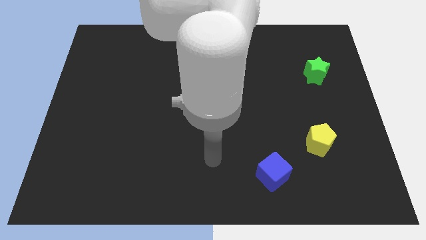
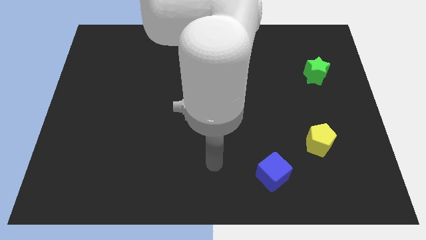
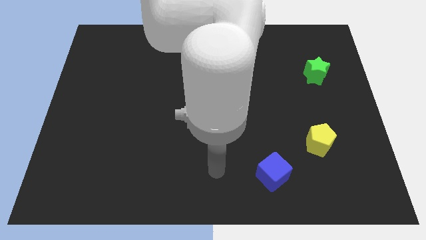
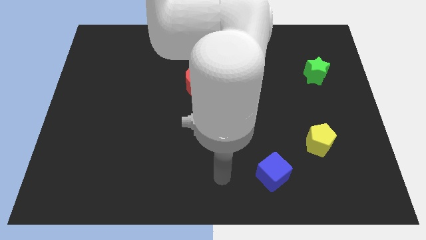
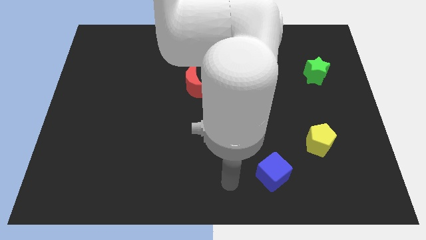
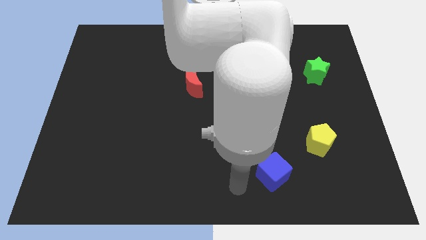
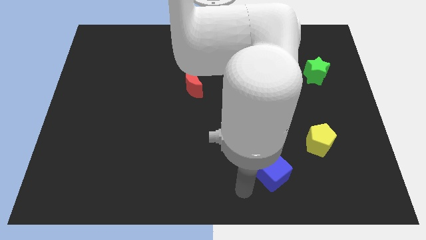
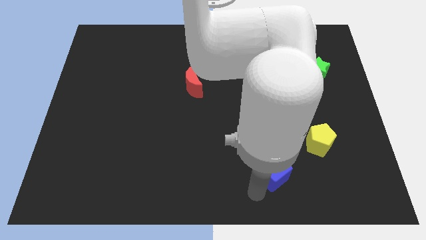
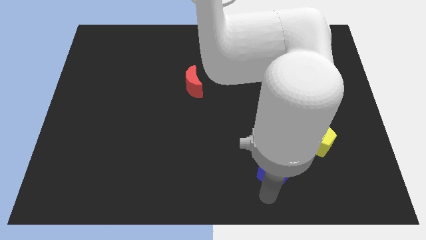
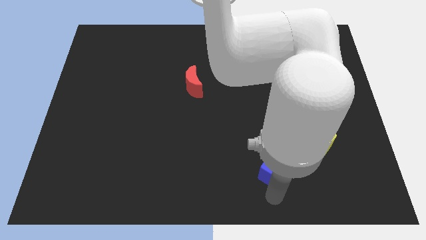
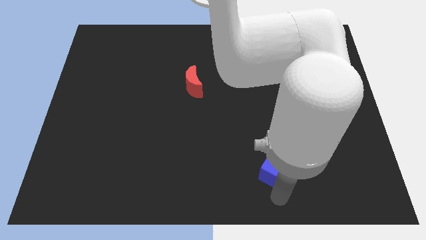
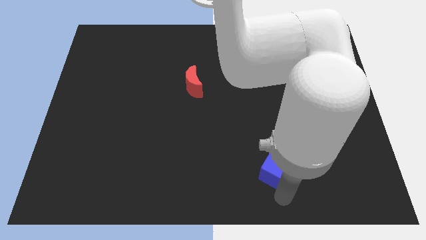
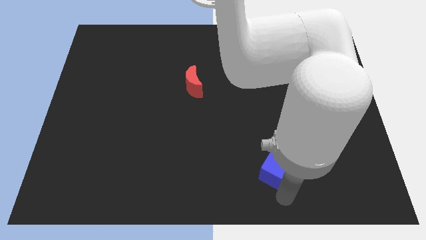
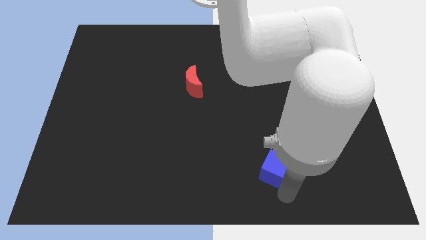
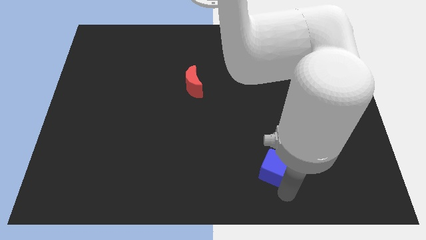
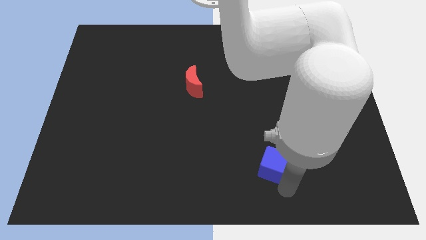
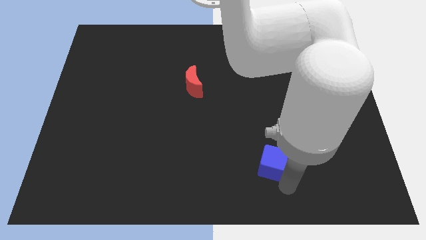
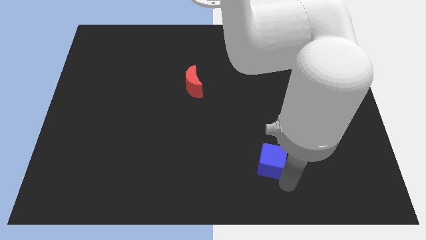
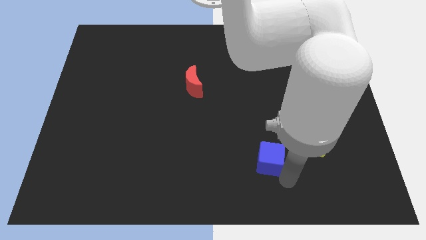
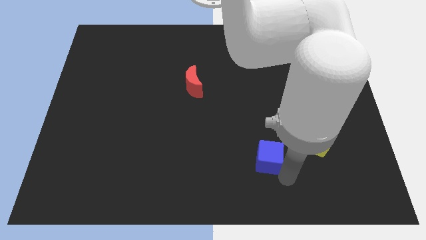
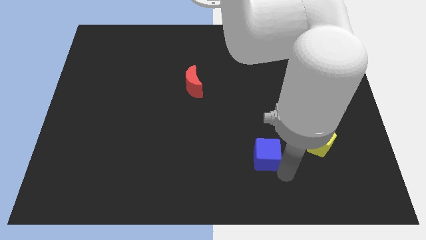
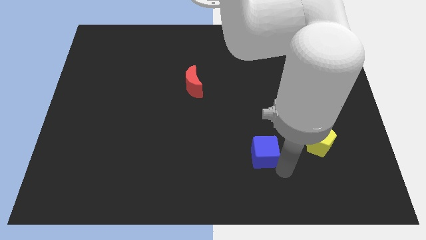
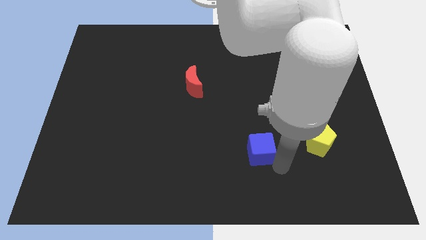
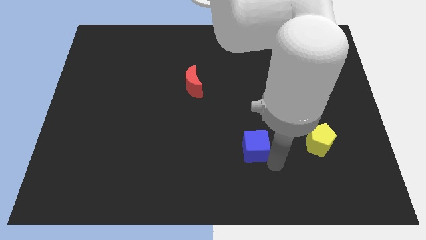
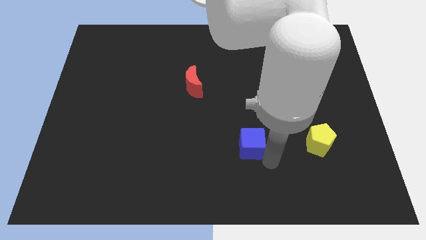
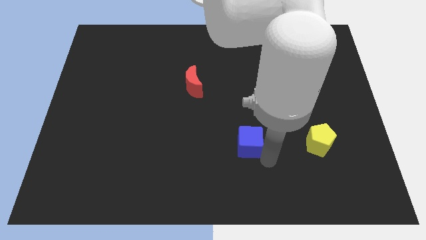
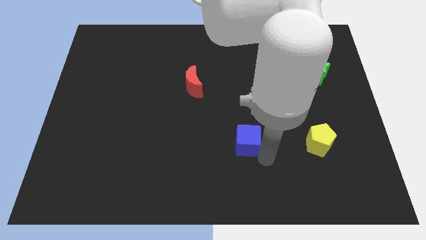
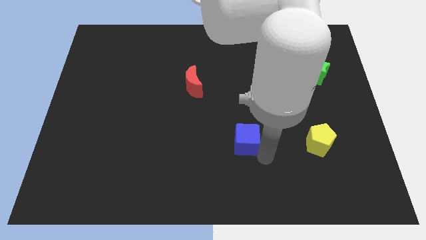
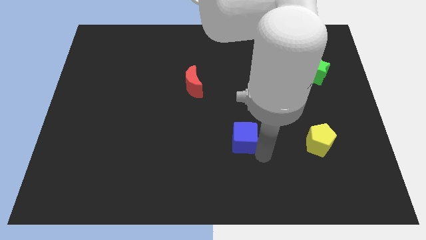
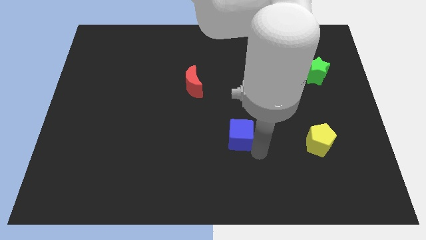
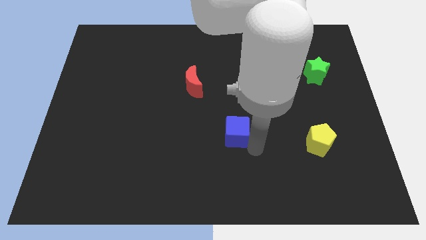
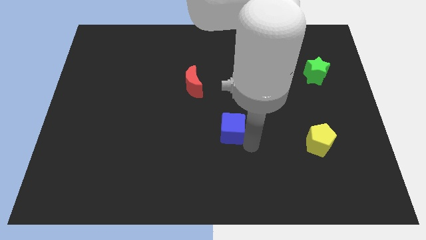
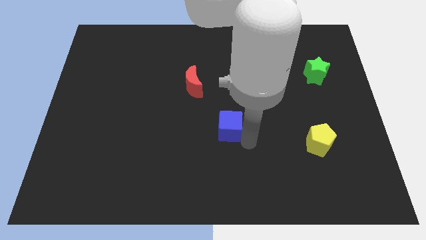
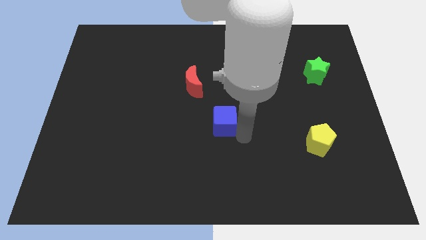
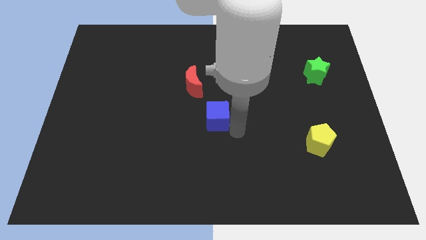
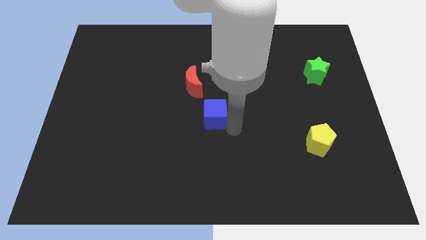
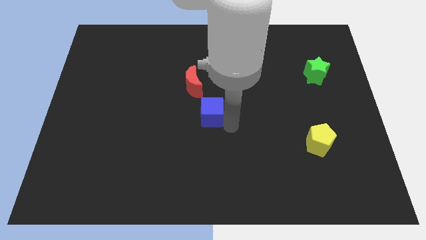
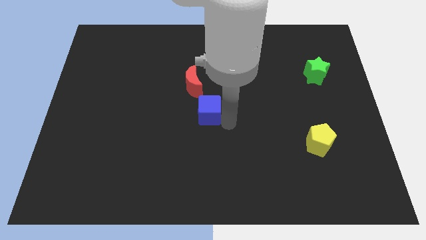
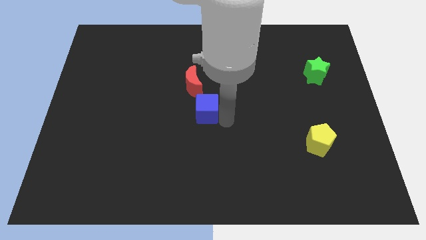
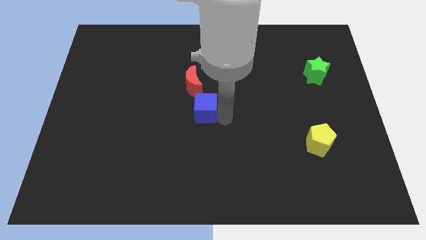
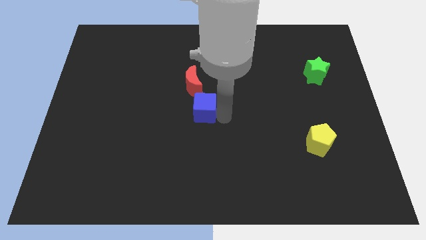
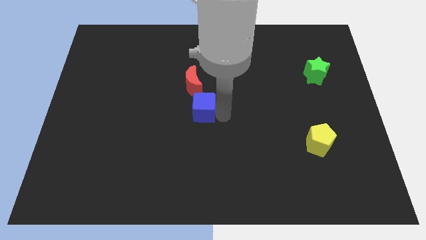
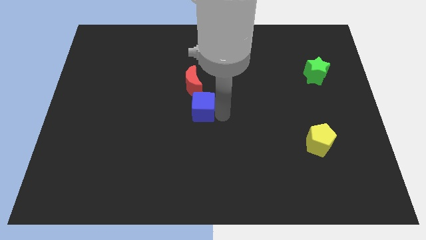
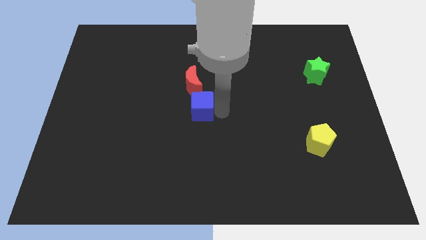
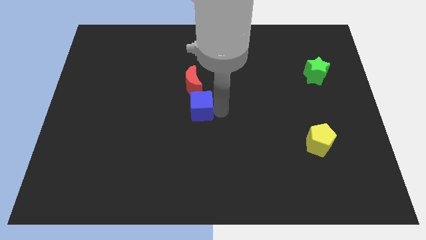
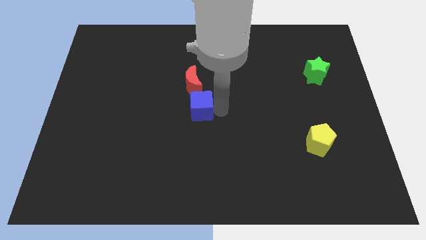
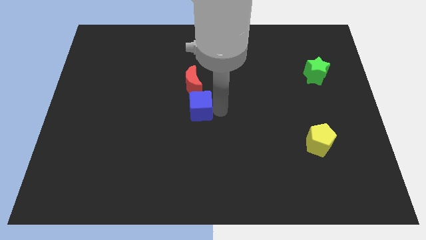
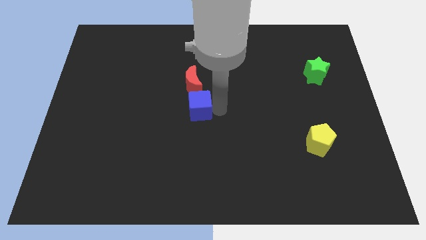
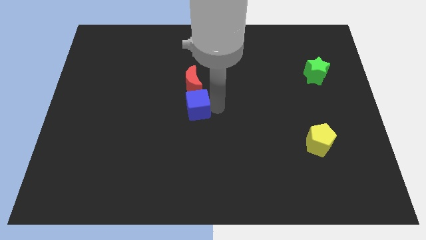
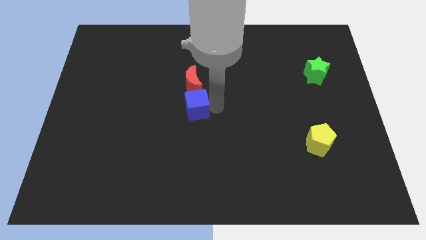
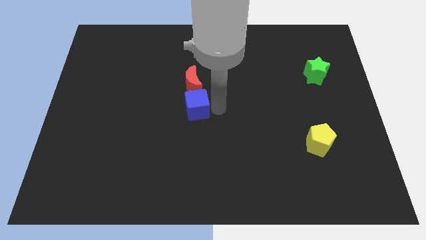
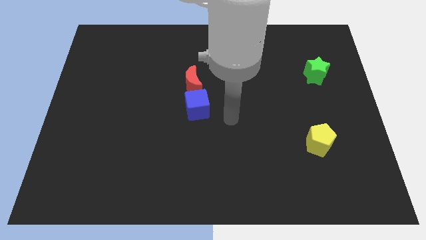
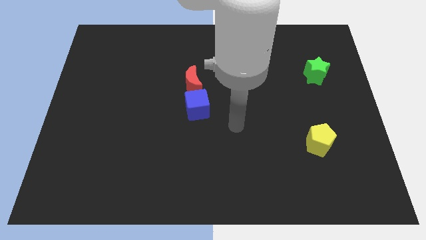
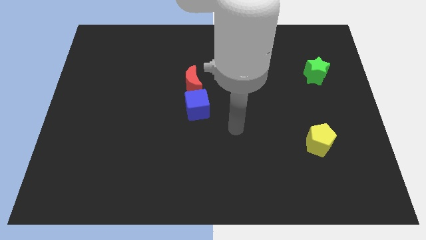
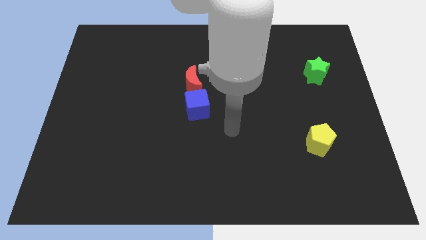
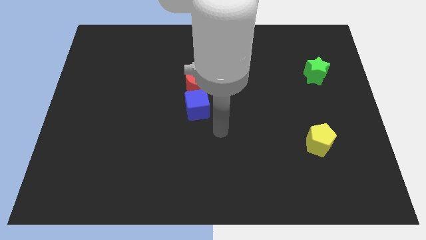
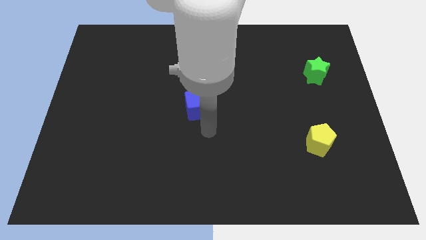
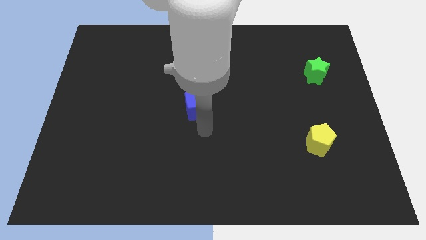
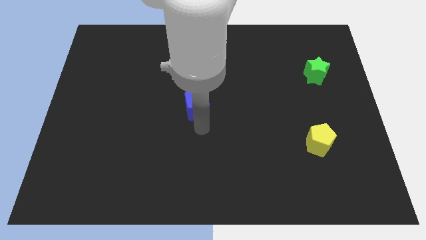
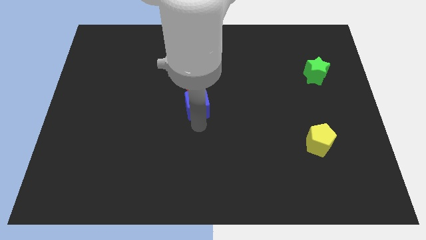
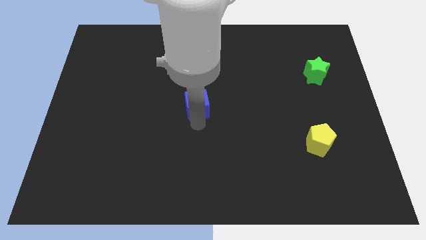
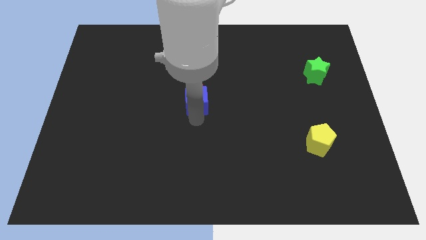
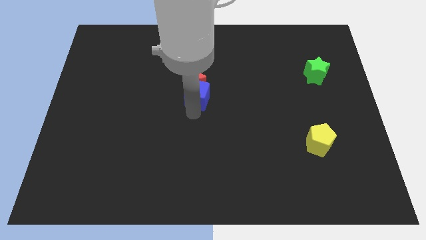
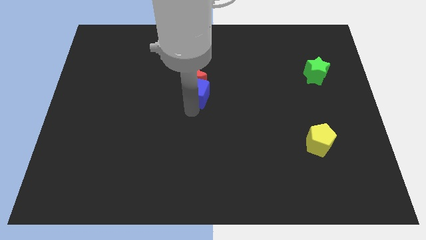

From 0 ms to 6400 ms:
slide the cube towards the moon

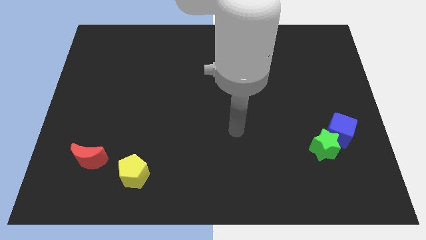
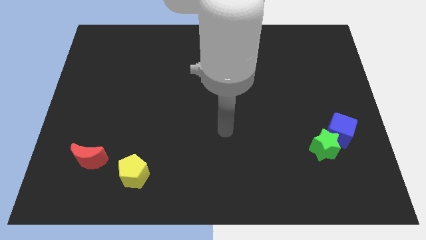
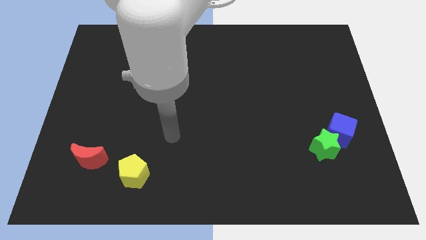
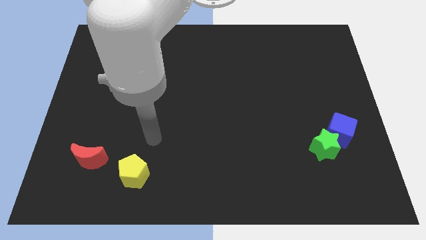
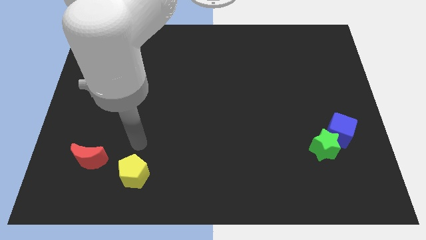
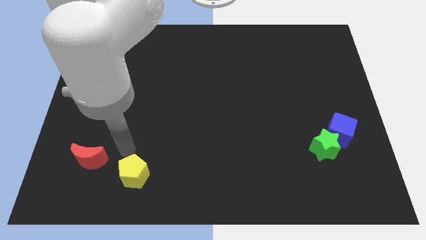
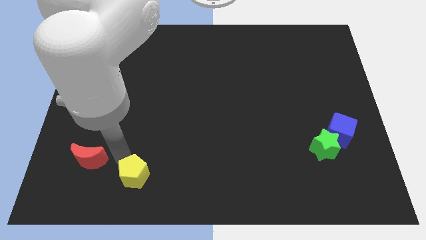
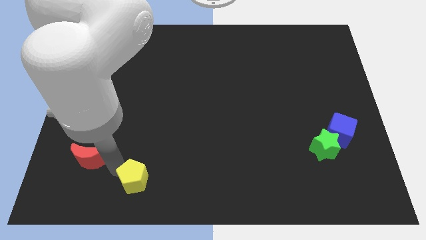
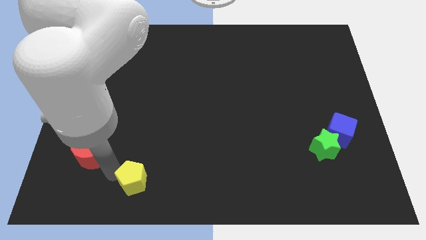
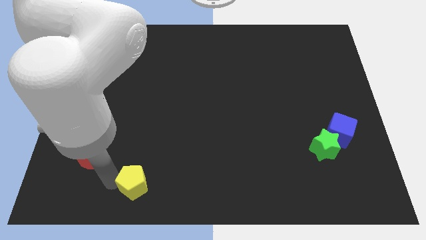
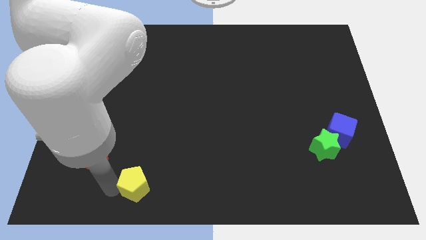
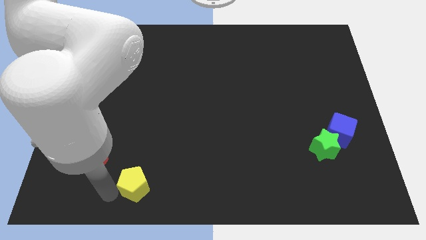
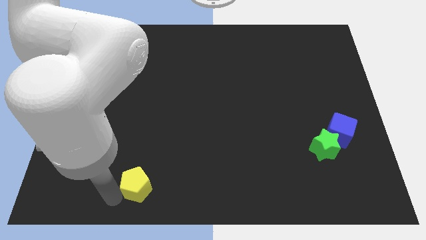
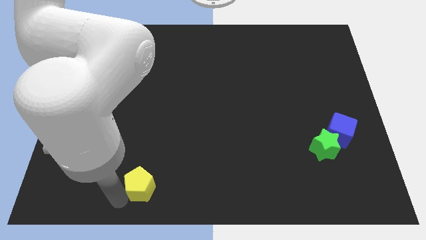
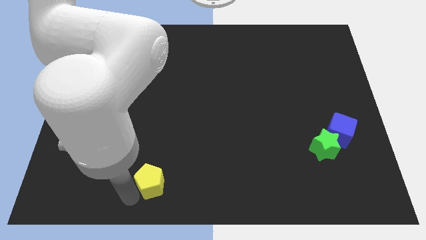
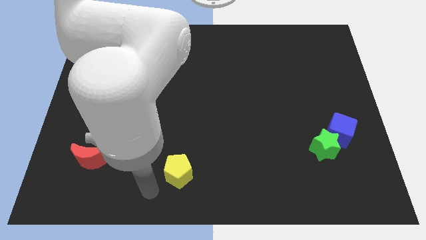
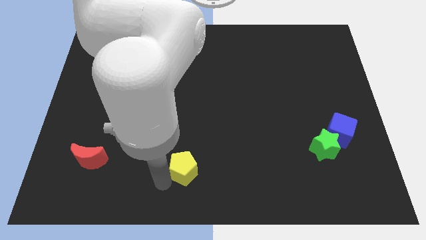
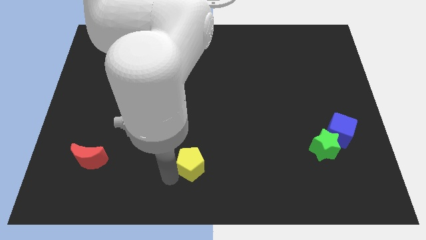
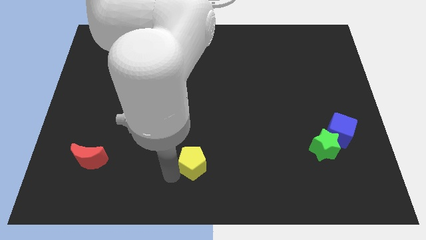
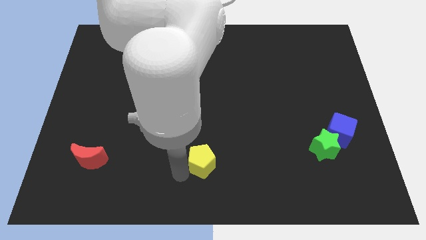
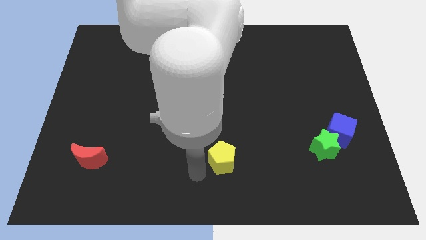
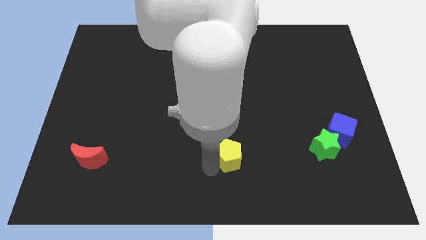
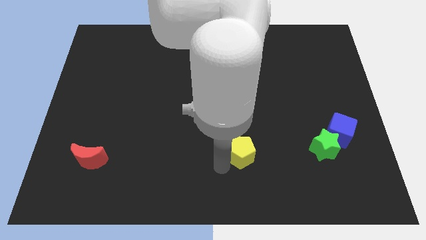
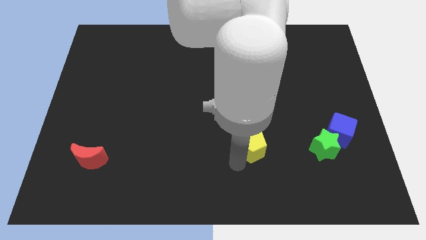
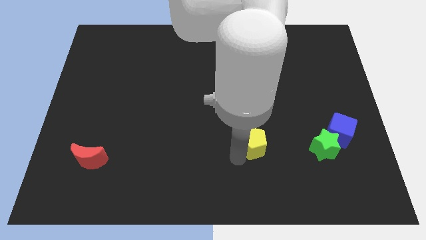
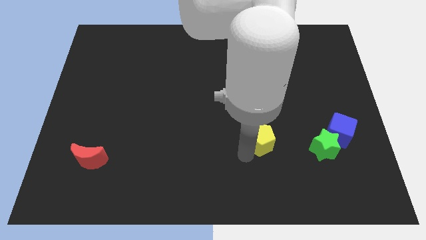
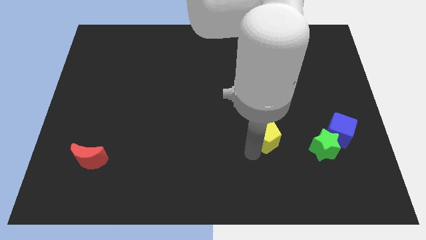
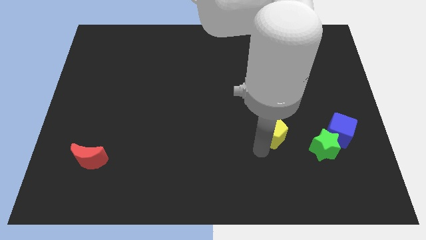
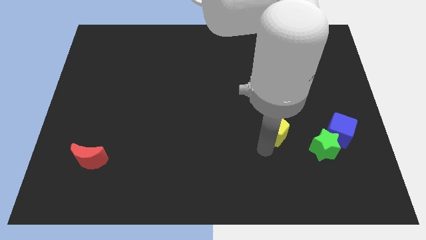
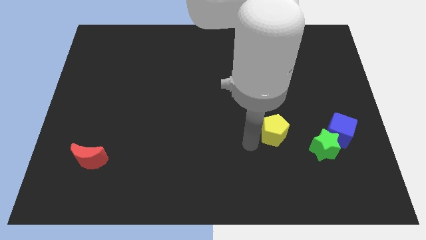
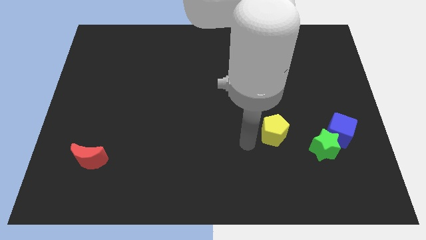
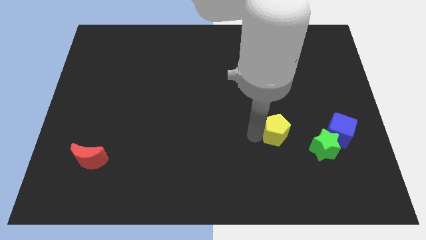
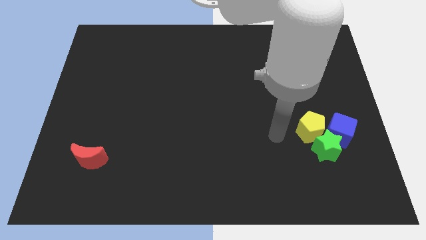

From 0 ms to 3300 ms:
move the yellow block close to the star
